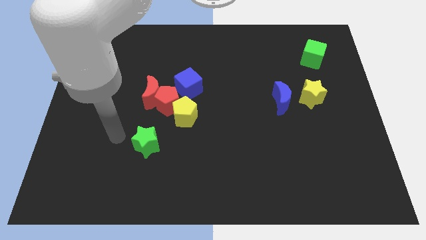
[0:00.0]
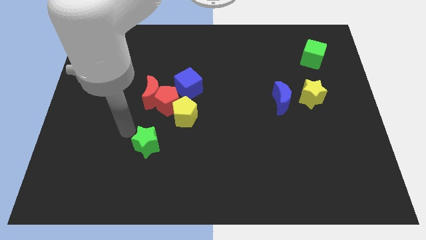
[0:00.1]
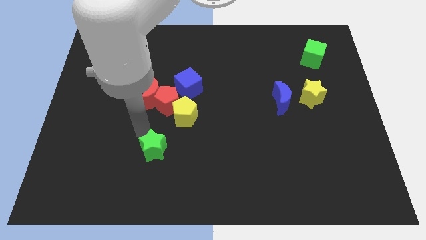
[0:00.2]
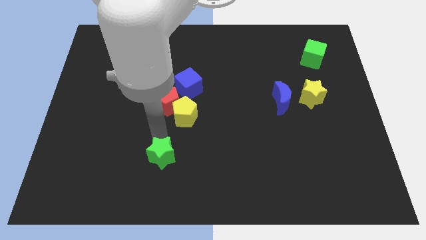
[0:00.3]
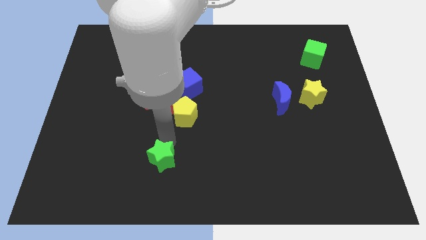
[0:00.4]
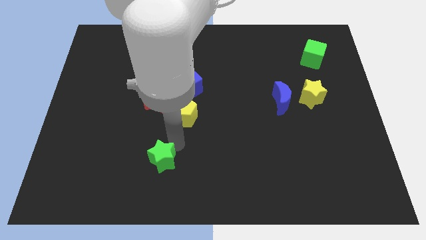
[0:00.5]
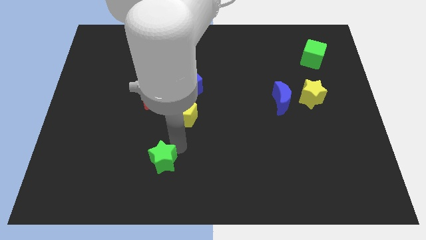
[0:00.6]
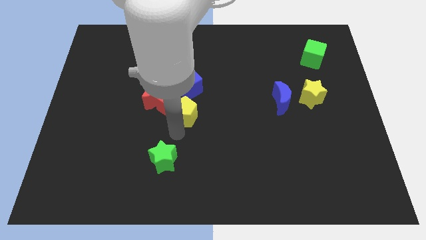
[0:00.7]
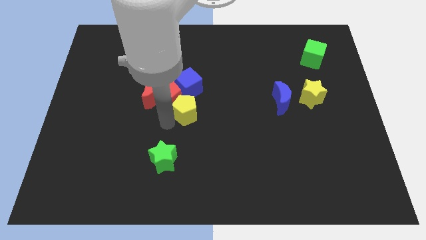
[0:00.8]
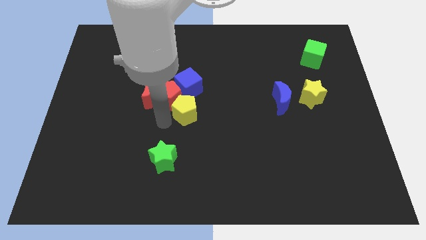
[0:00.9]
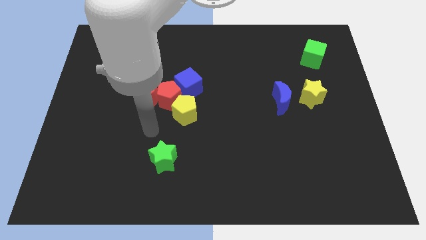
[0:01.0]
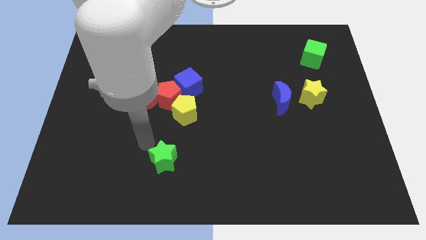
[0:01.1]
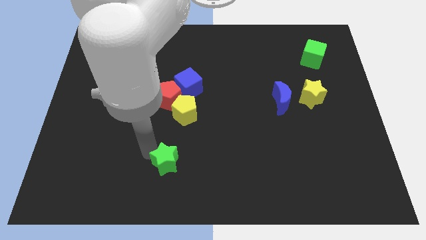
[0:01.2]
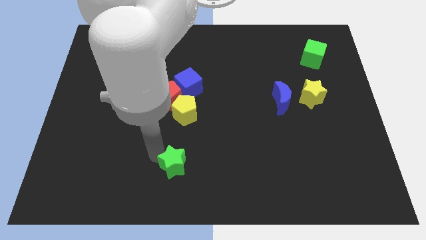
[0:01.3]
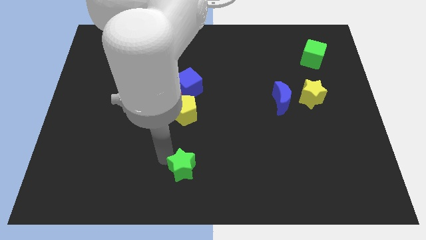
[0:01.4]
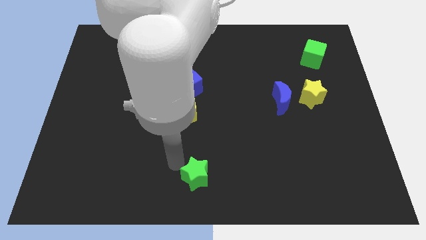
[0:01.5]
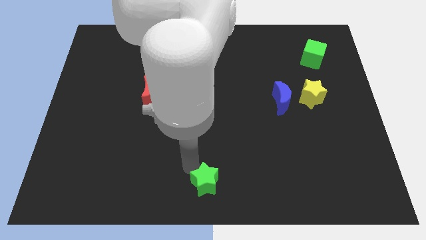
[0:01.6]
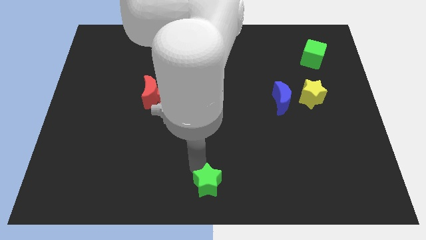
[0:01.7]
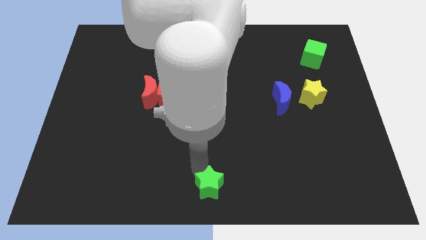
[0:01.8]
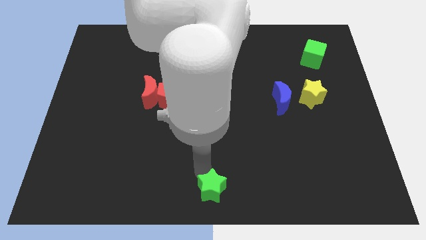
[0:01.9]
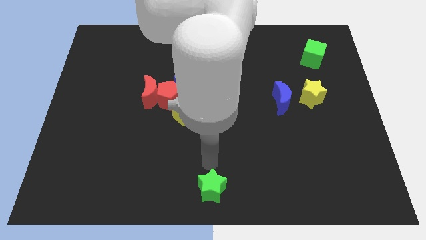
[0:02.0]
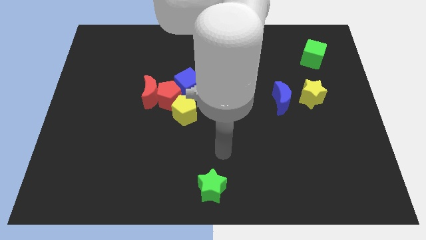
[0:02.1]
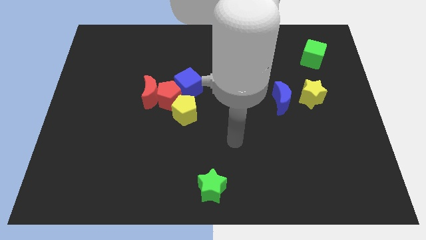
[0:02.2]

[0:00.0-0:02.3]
place the green star to the bottom center

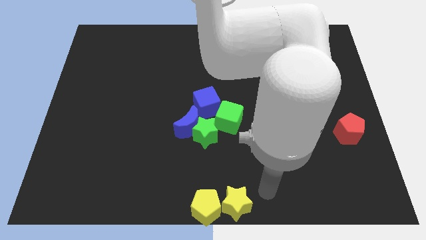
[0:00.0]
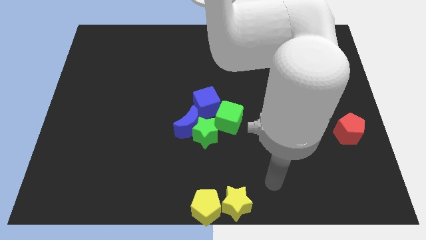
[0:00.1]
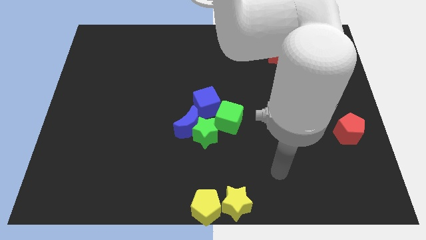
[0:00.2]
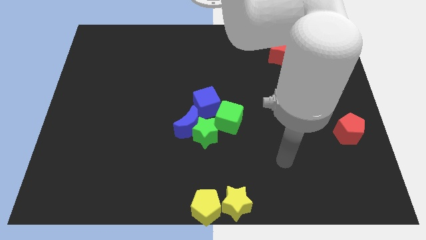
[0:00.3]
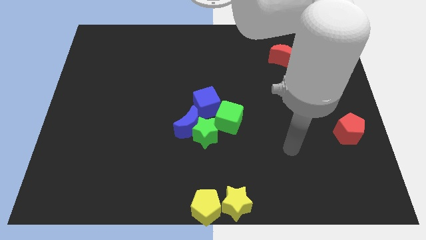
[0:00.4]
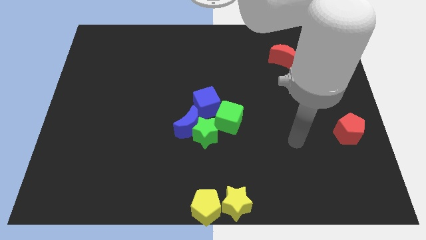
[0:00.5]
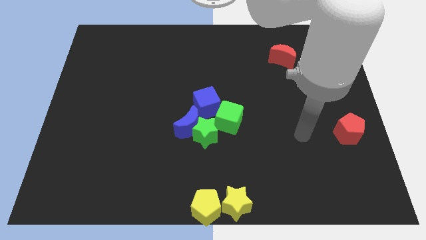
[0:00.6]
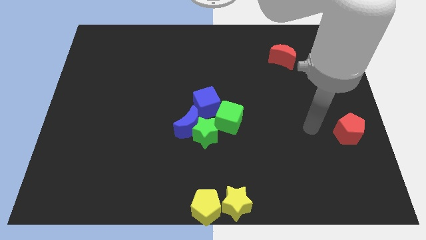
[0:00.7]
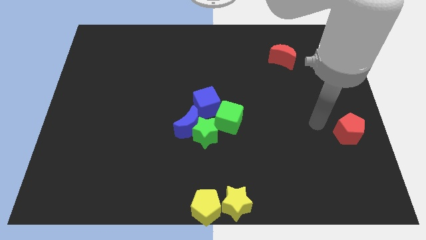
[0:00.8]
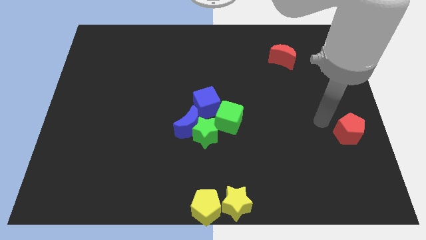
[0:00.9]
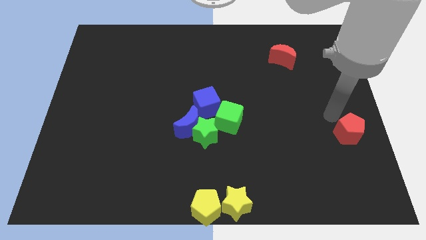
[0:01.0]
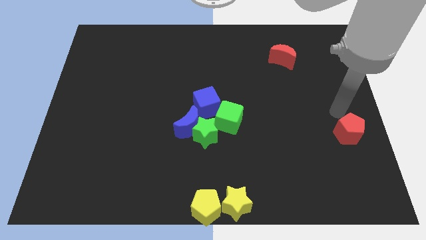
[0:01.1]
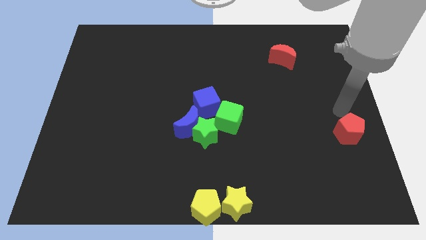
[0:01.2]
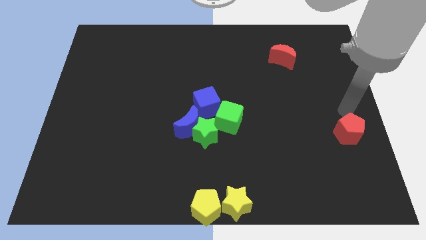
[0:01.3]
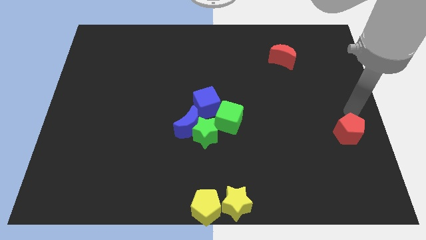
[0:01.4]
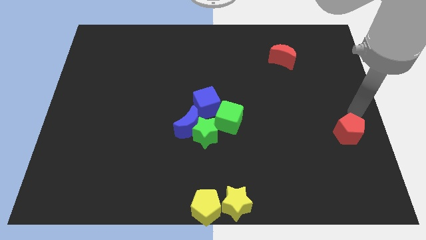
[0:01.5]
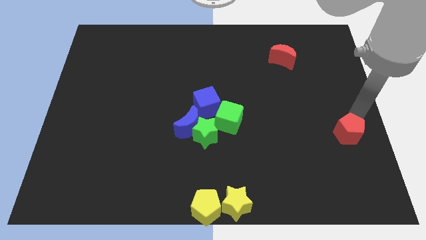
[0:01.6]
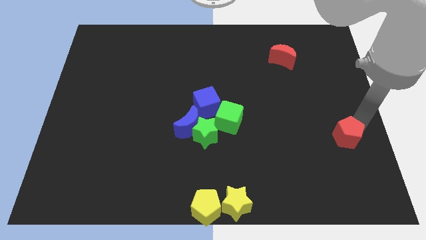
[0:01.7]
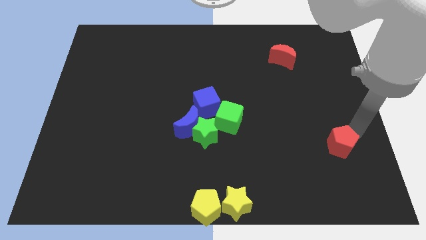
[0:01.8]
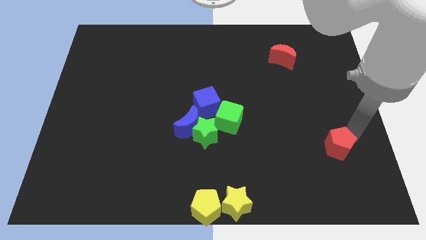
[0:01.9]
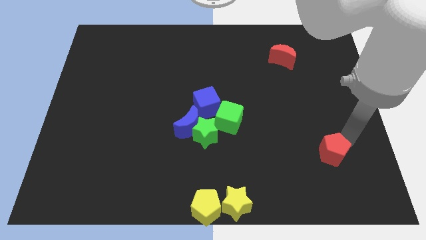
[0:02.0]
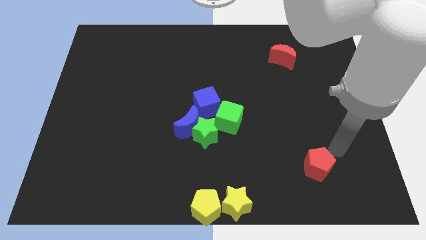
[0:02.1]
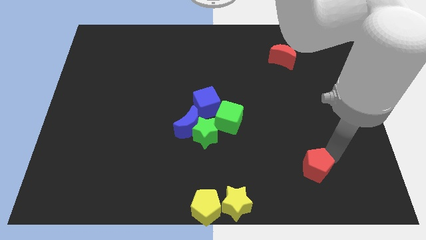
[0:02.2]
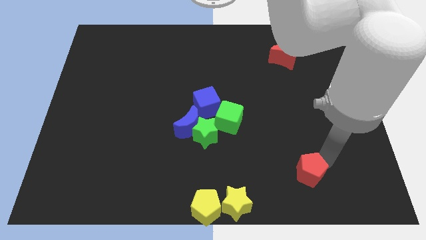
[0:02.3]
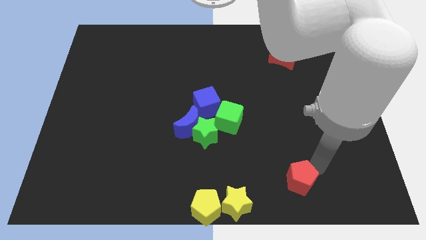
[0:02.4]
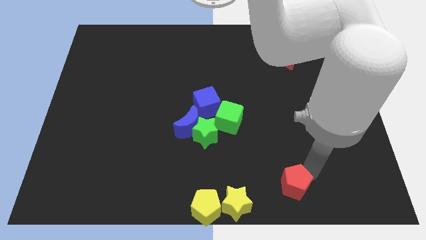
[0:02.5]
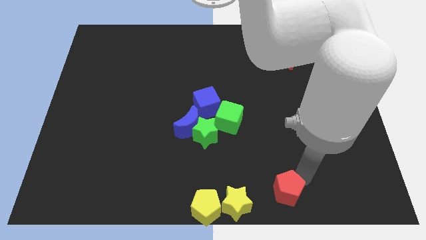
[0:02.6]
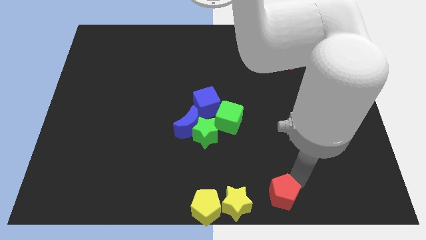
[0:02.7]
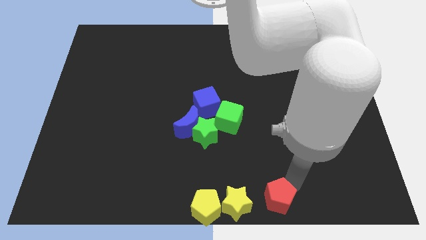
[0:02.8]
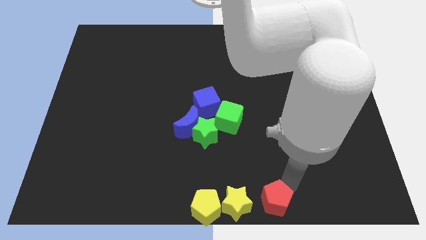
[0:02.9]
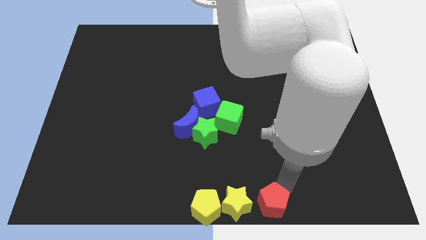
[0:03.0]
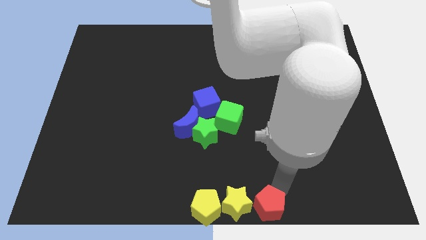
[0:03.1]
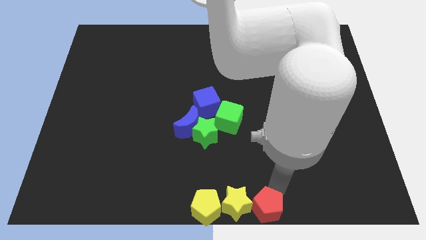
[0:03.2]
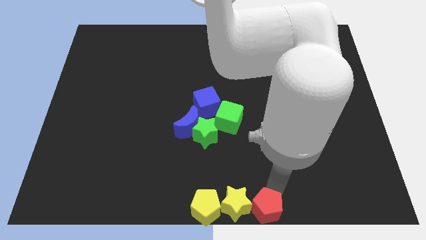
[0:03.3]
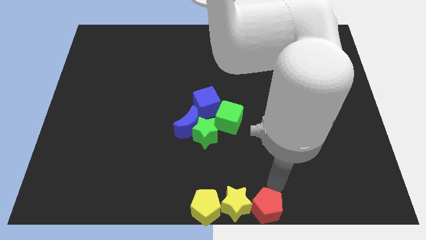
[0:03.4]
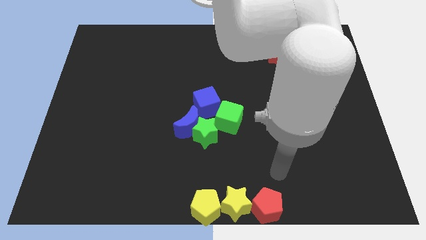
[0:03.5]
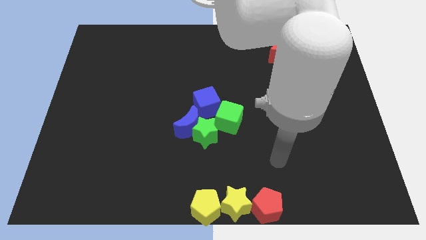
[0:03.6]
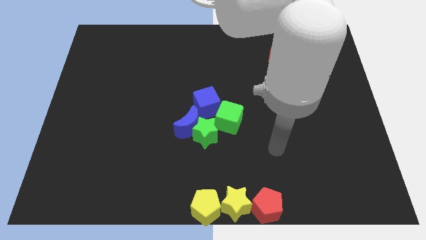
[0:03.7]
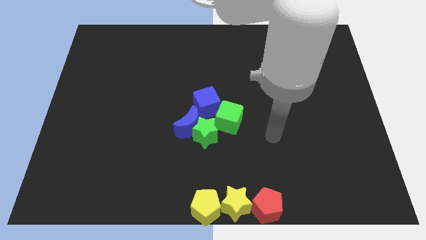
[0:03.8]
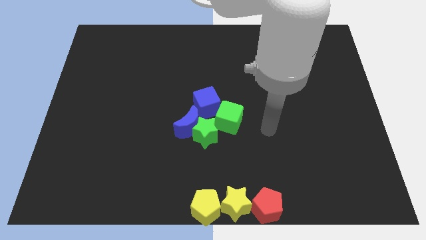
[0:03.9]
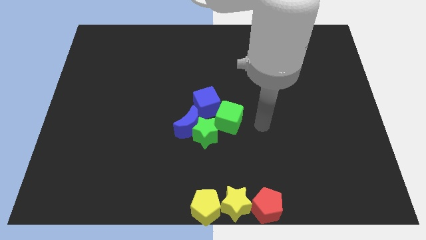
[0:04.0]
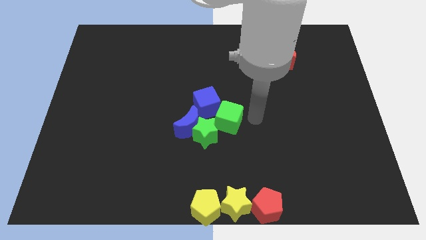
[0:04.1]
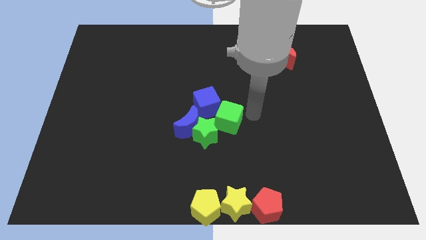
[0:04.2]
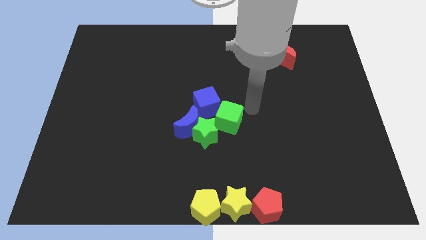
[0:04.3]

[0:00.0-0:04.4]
move the red pentagon and place it close to the yellow star

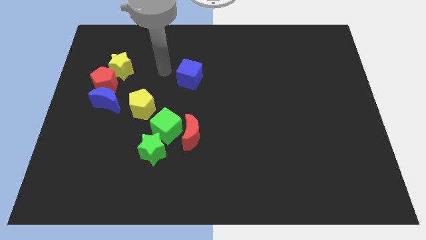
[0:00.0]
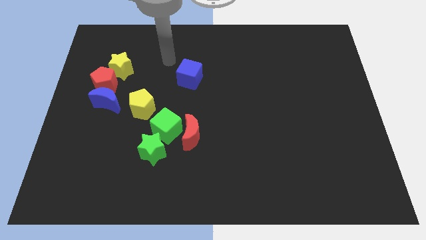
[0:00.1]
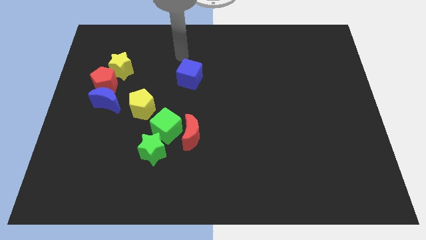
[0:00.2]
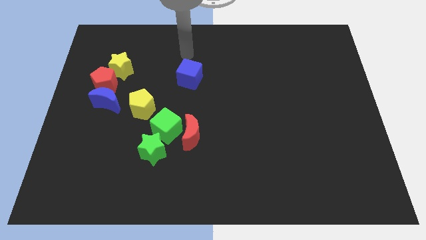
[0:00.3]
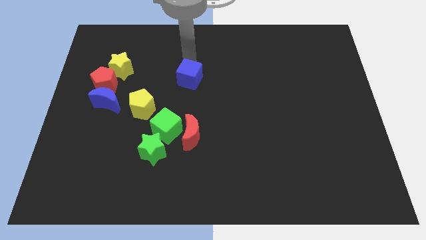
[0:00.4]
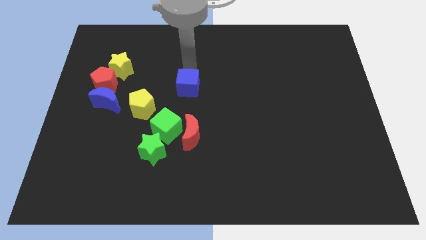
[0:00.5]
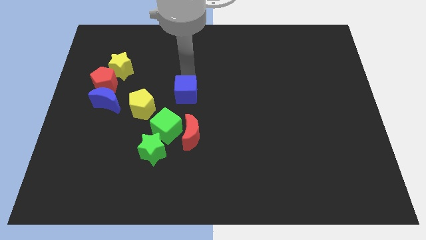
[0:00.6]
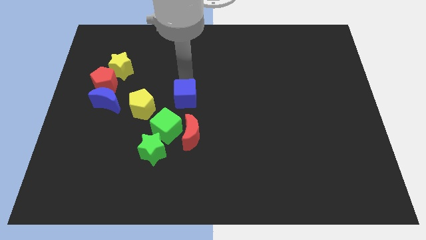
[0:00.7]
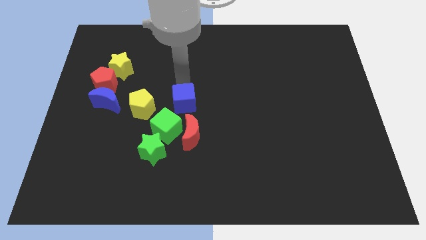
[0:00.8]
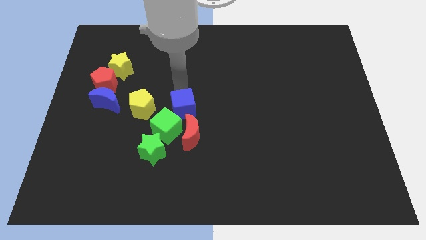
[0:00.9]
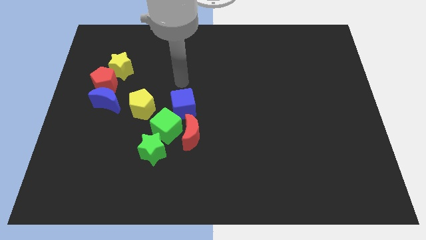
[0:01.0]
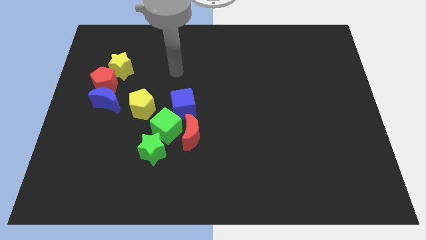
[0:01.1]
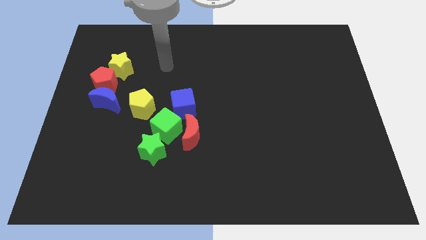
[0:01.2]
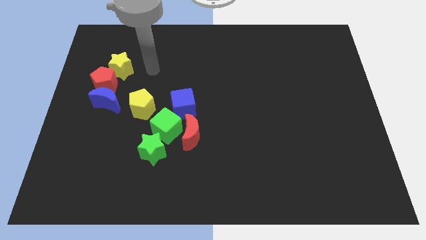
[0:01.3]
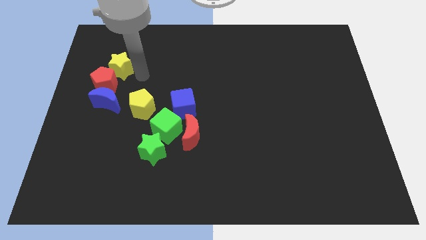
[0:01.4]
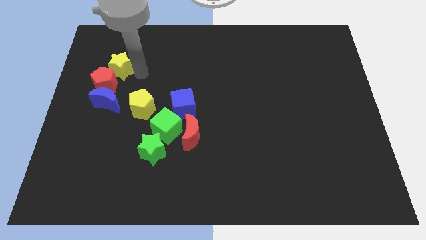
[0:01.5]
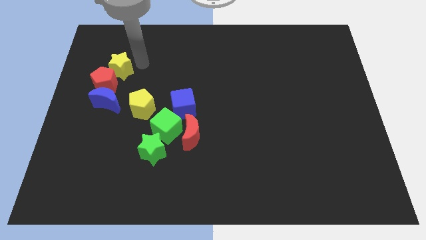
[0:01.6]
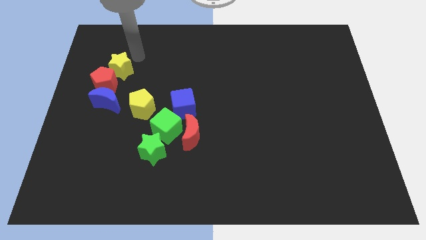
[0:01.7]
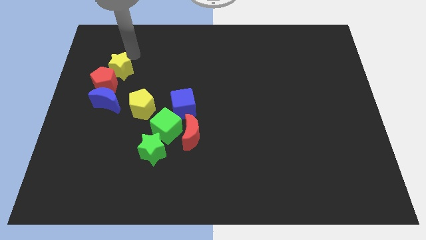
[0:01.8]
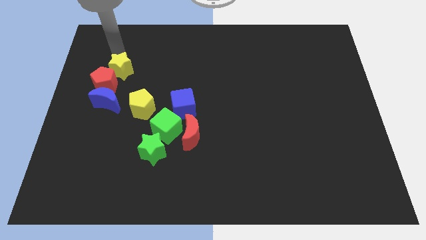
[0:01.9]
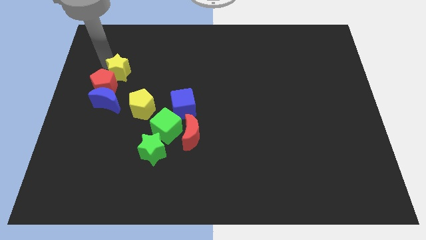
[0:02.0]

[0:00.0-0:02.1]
push blue cube into the group of blocks
